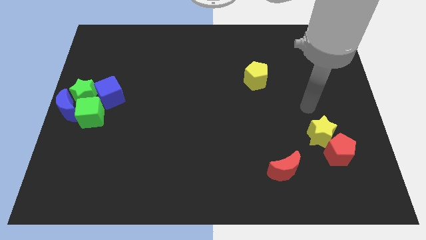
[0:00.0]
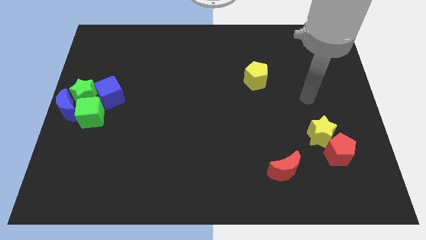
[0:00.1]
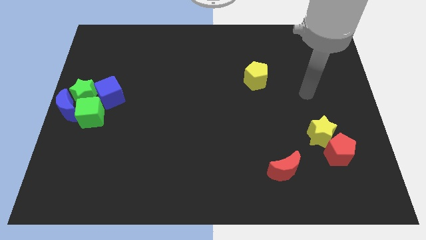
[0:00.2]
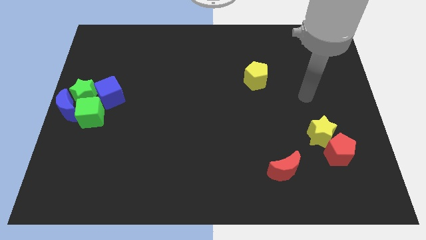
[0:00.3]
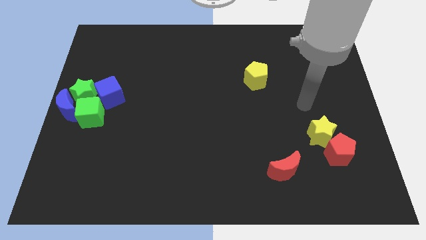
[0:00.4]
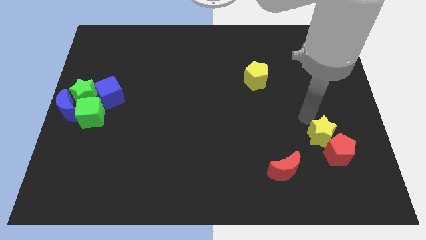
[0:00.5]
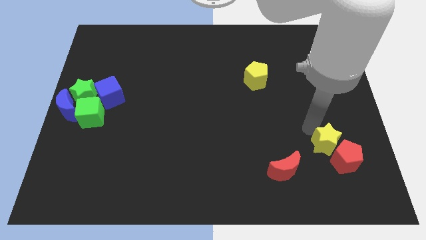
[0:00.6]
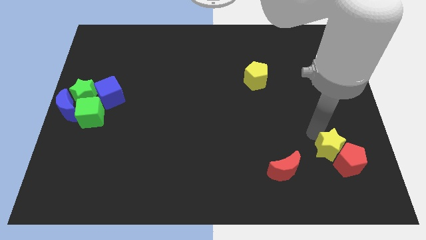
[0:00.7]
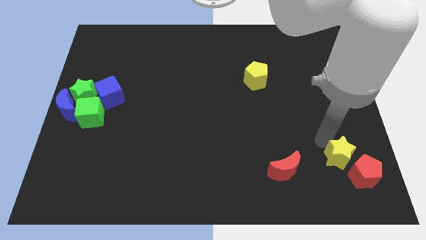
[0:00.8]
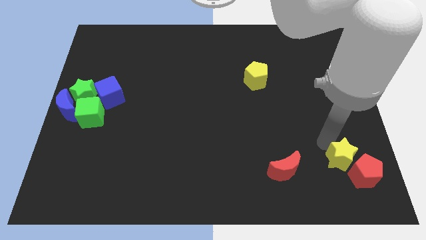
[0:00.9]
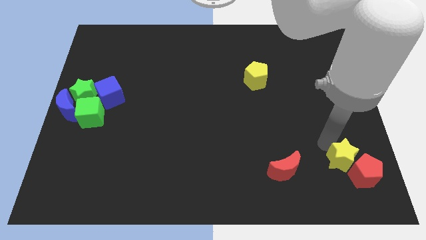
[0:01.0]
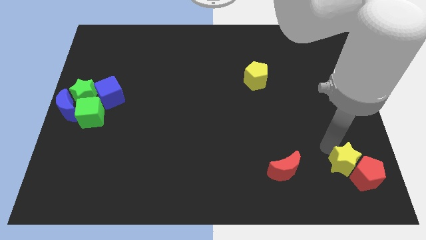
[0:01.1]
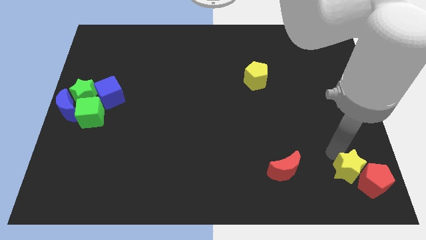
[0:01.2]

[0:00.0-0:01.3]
drag the yellow star parallel right to the red moon

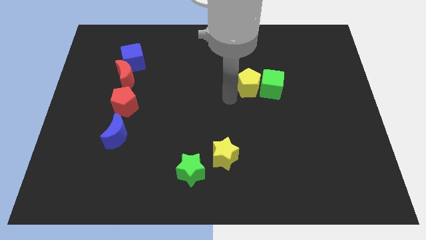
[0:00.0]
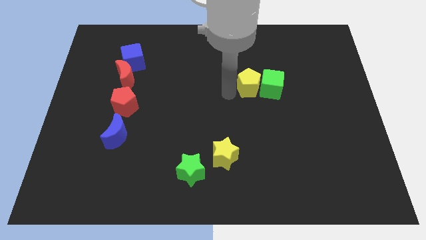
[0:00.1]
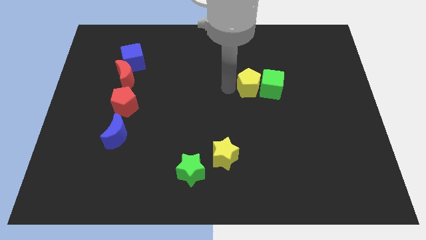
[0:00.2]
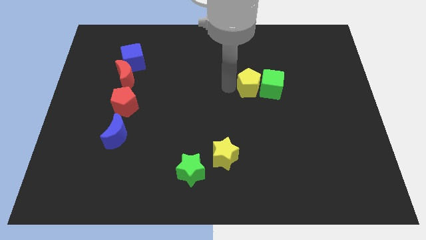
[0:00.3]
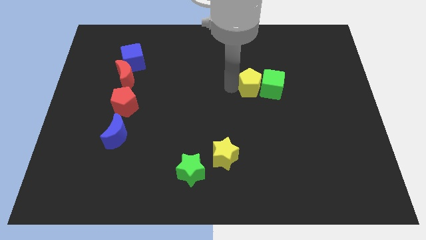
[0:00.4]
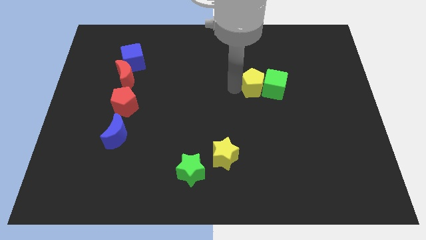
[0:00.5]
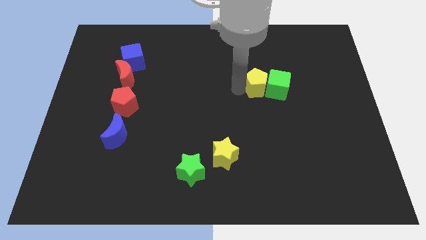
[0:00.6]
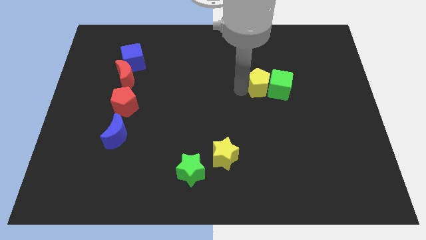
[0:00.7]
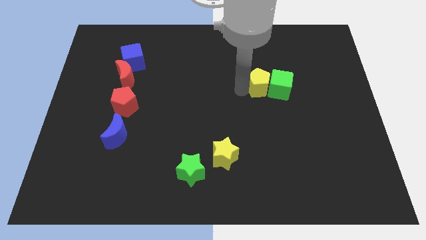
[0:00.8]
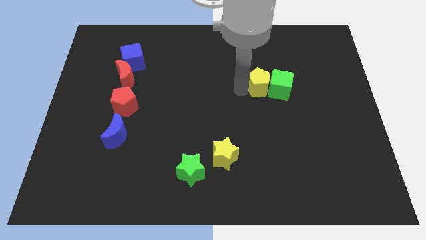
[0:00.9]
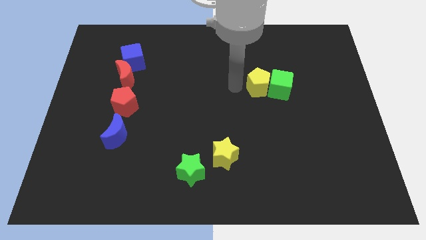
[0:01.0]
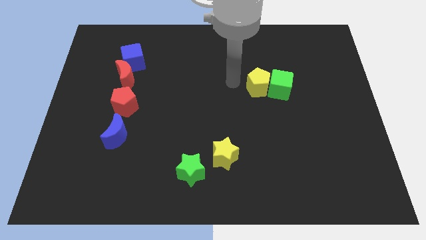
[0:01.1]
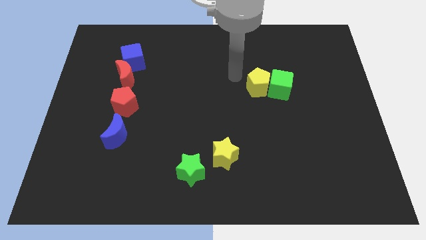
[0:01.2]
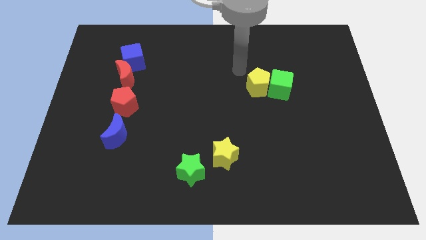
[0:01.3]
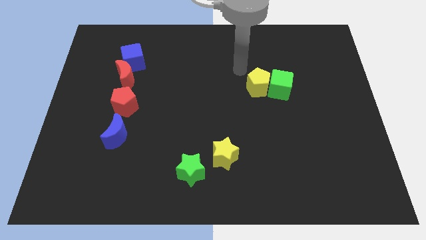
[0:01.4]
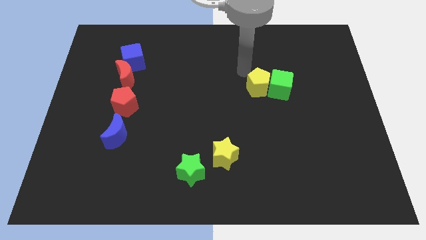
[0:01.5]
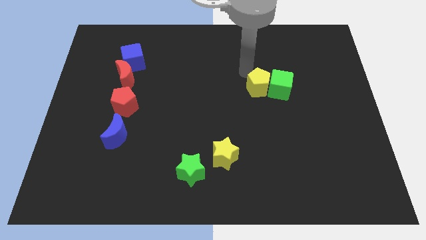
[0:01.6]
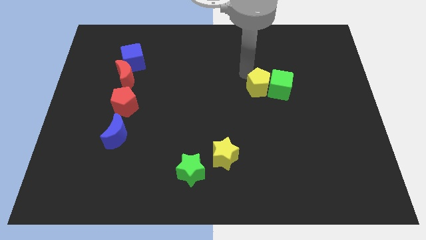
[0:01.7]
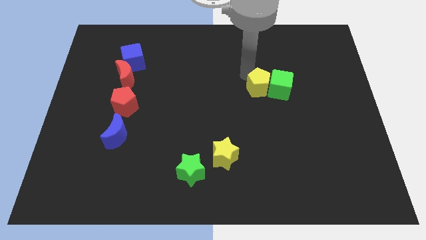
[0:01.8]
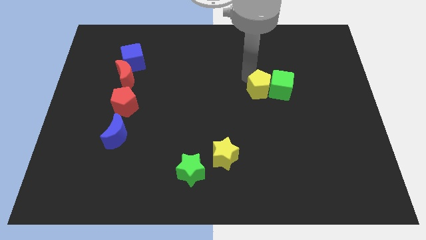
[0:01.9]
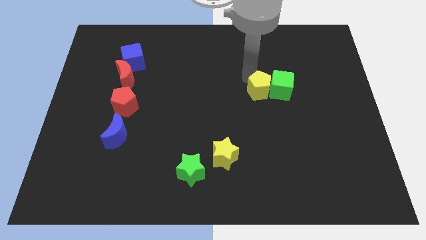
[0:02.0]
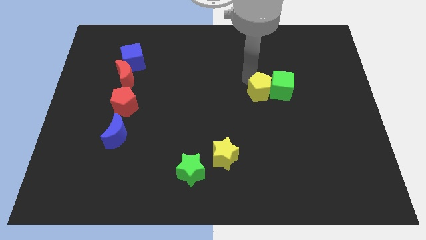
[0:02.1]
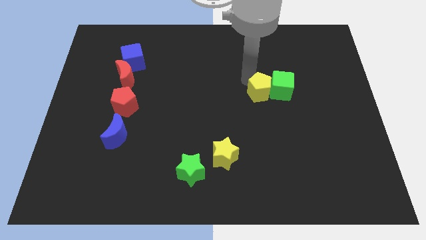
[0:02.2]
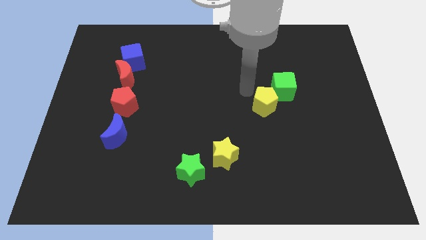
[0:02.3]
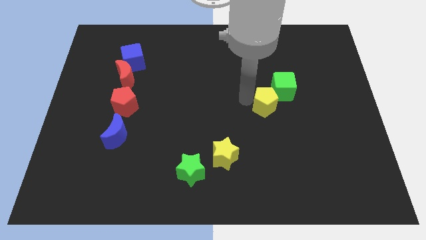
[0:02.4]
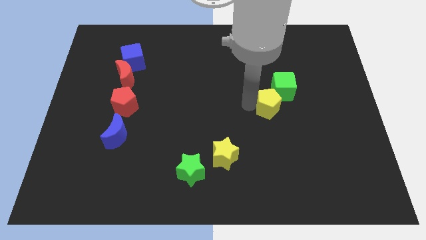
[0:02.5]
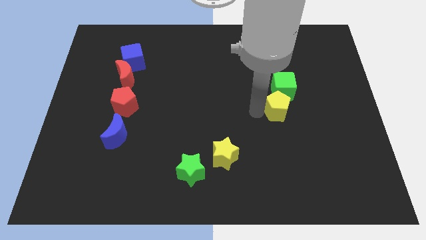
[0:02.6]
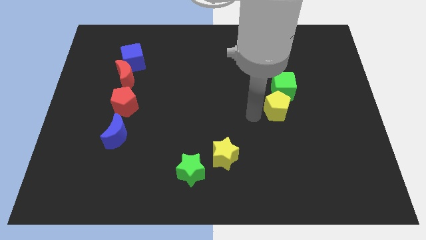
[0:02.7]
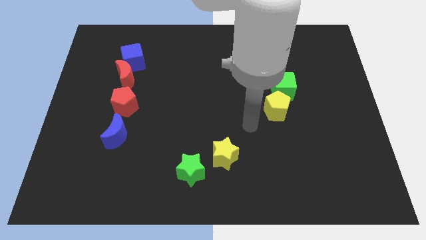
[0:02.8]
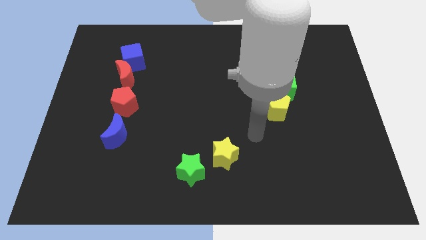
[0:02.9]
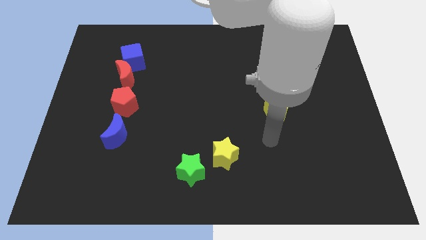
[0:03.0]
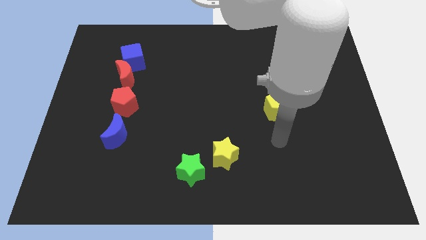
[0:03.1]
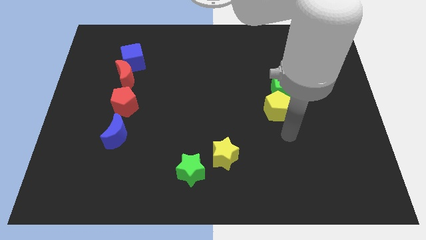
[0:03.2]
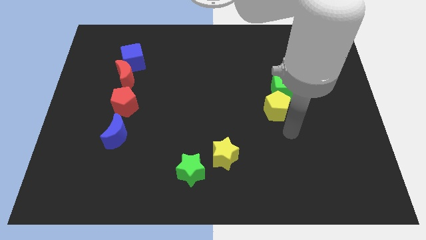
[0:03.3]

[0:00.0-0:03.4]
move the yellow pentagon to the bottom left side of the green cube

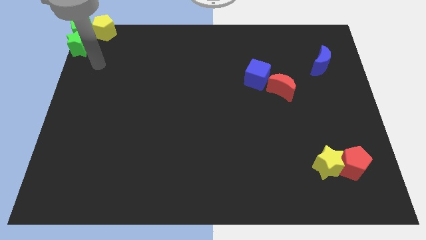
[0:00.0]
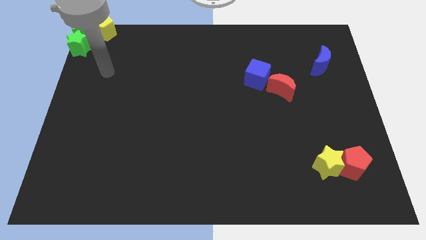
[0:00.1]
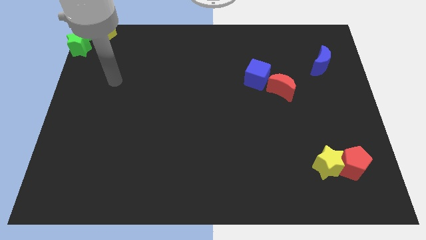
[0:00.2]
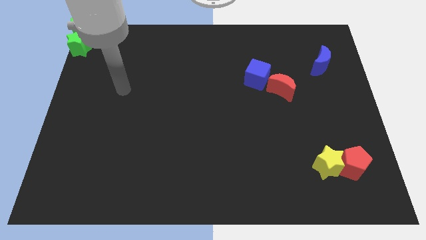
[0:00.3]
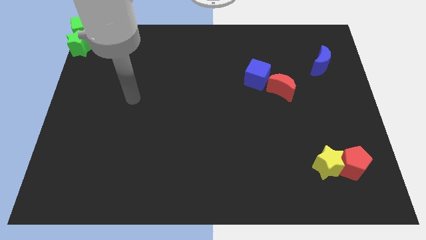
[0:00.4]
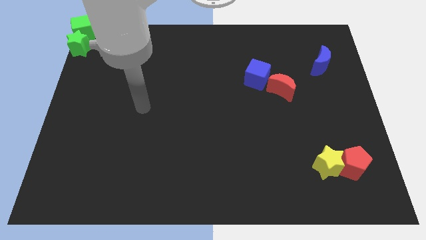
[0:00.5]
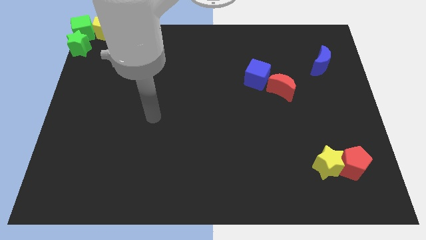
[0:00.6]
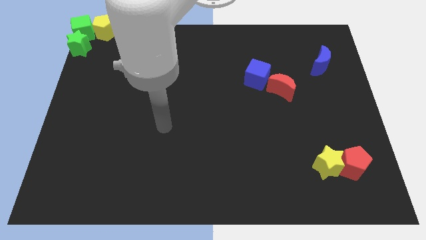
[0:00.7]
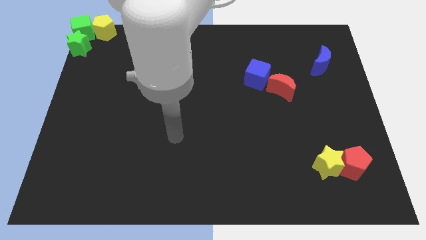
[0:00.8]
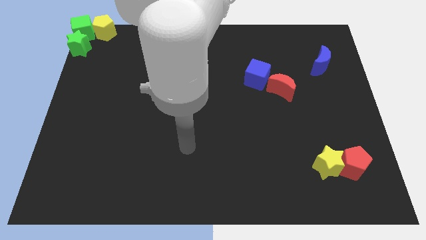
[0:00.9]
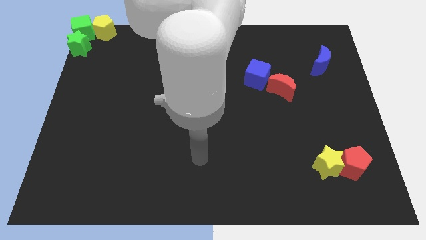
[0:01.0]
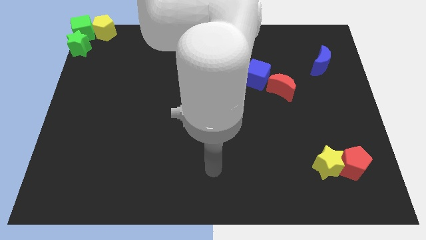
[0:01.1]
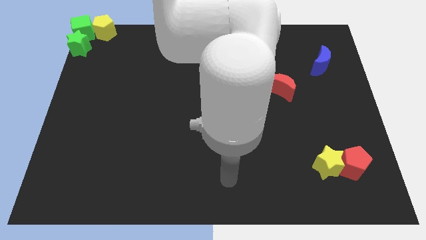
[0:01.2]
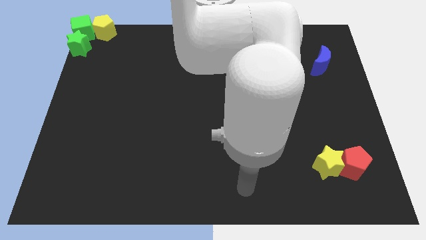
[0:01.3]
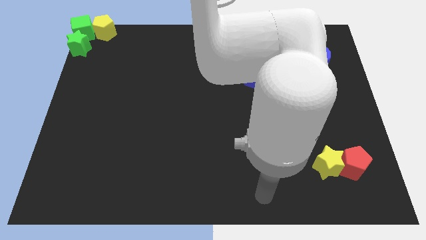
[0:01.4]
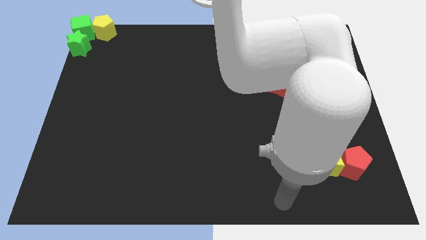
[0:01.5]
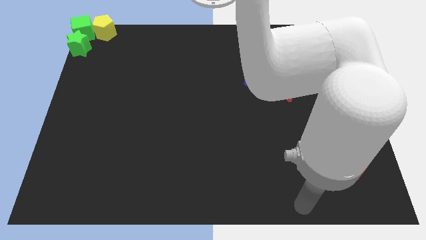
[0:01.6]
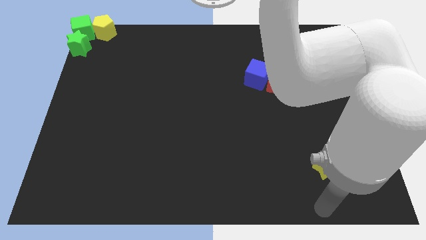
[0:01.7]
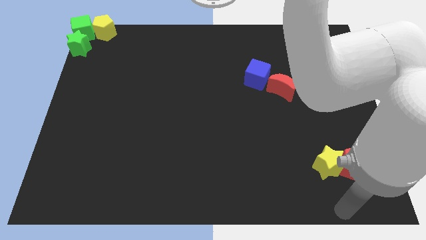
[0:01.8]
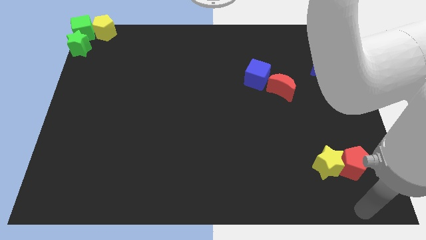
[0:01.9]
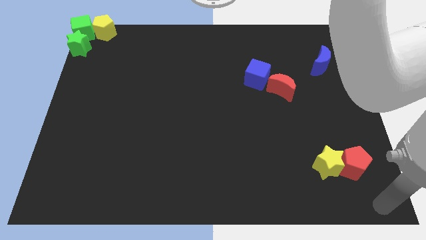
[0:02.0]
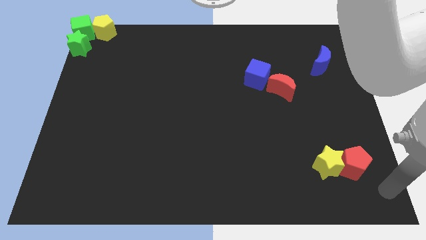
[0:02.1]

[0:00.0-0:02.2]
move the arm to the bottom right of the board

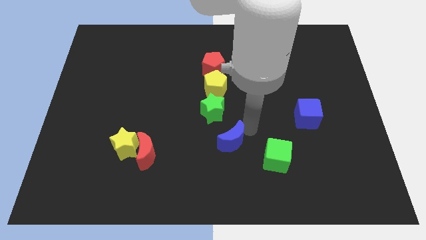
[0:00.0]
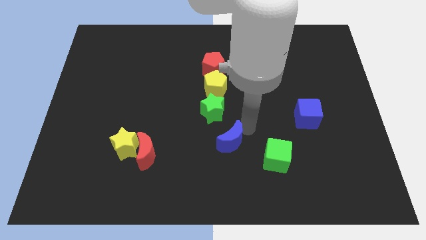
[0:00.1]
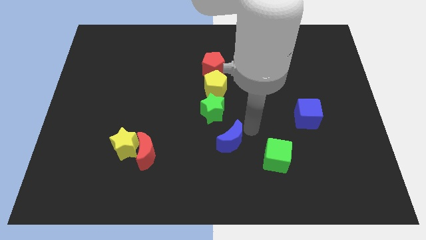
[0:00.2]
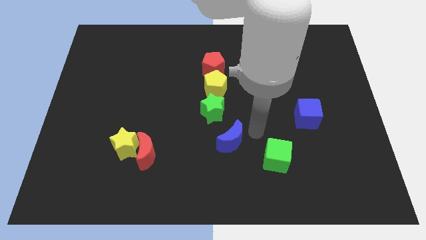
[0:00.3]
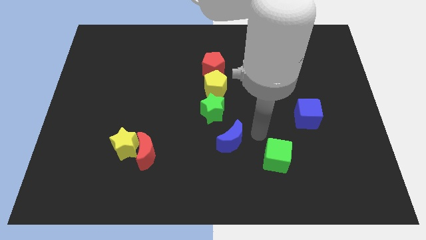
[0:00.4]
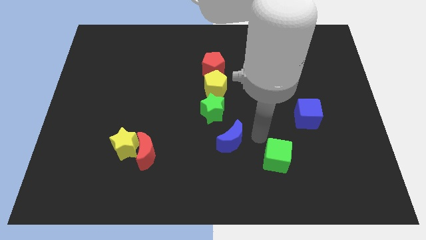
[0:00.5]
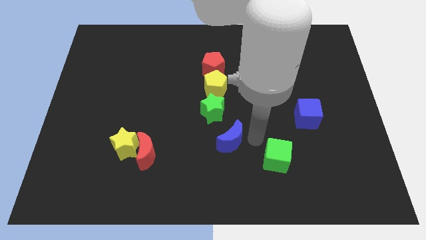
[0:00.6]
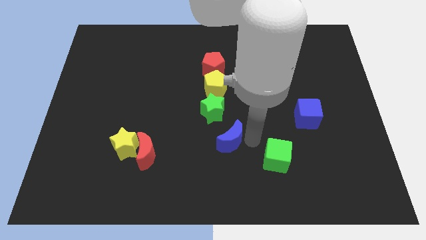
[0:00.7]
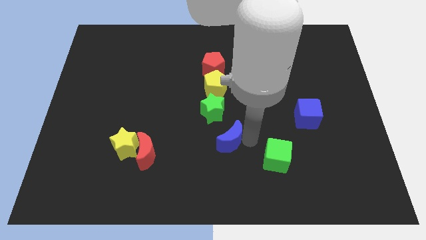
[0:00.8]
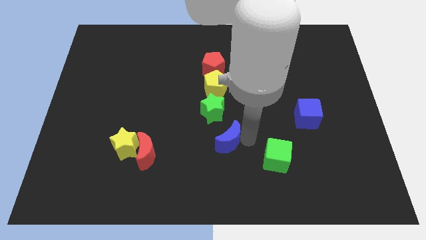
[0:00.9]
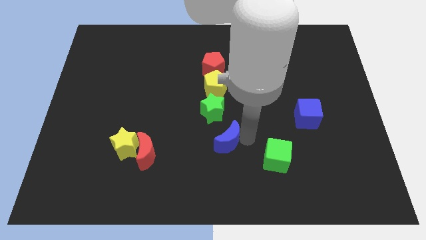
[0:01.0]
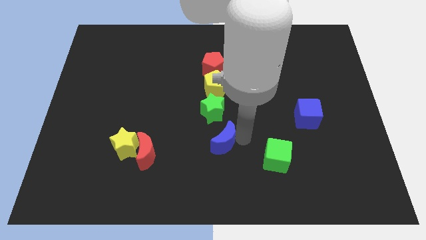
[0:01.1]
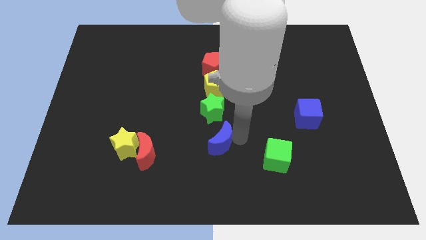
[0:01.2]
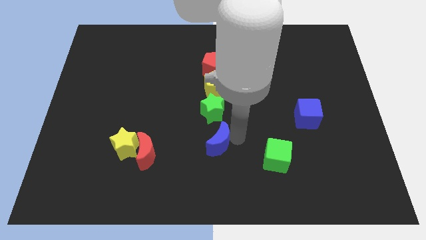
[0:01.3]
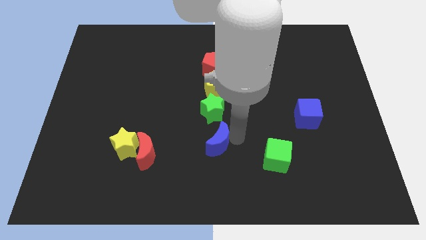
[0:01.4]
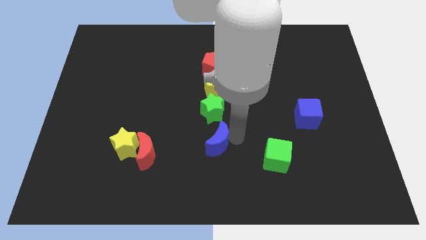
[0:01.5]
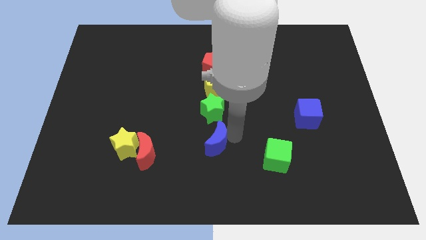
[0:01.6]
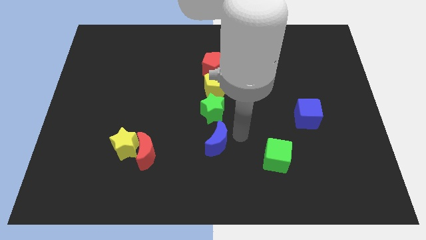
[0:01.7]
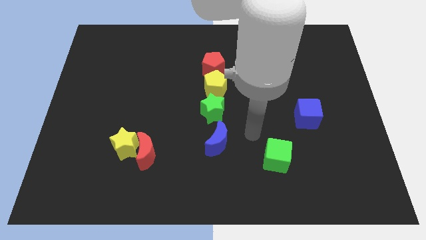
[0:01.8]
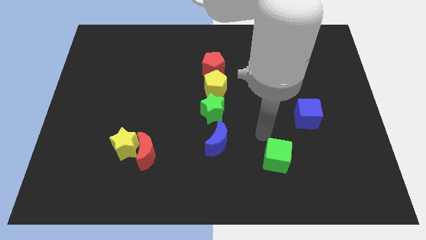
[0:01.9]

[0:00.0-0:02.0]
slide the blue moon vertically below the green star
